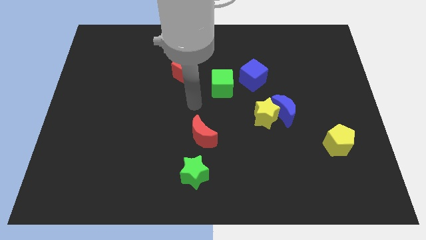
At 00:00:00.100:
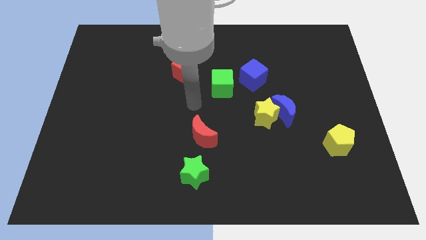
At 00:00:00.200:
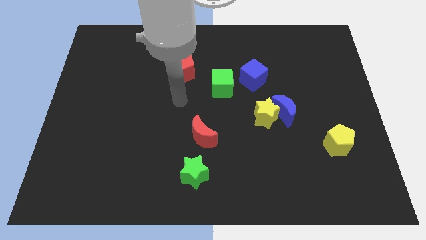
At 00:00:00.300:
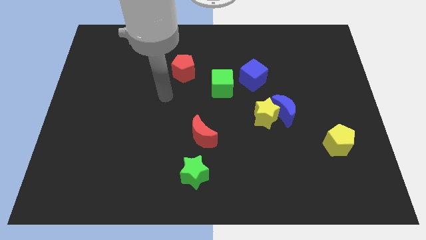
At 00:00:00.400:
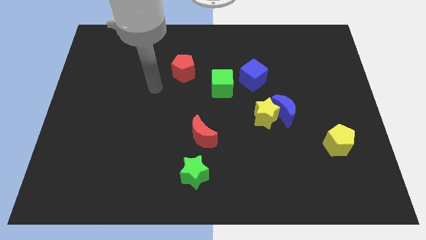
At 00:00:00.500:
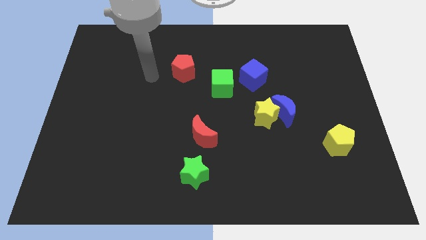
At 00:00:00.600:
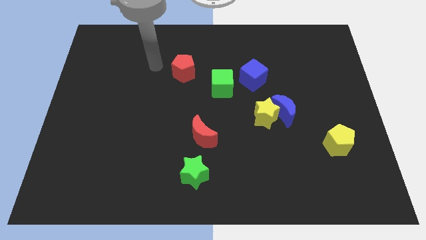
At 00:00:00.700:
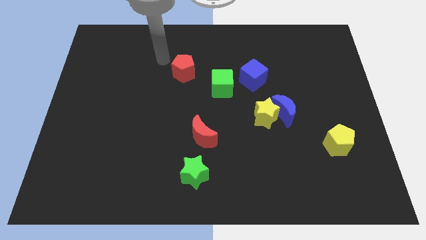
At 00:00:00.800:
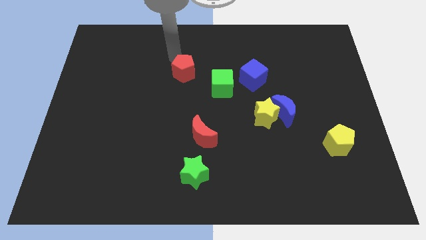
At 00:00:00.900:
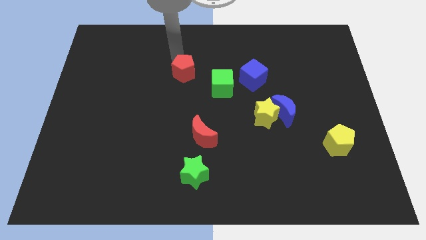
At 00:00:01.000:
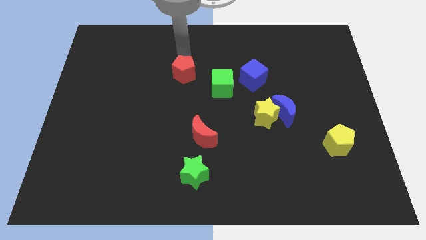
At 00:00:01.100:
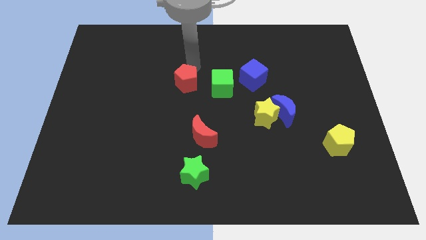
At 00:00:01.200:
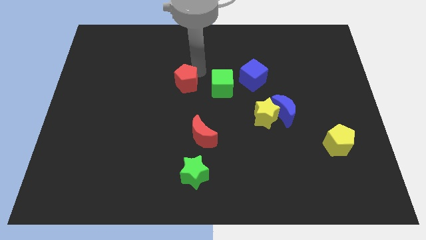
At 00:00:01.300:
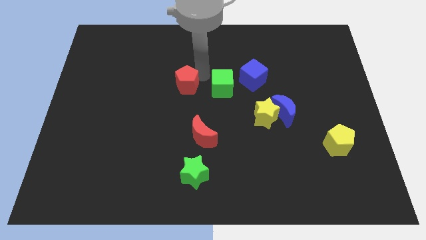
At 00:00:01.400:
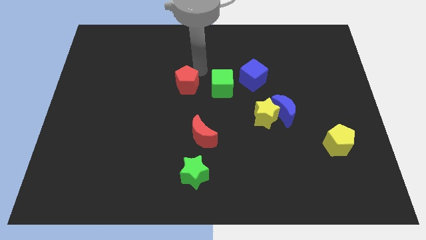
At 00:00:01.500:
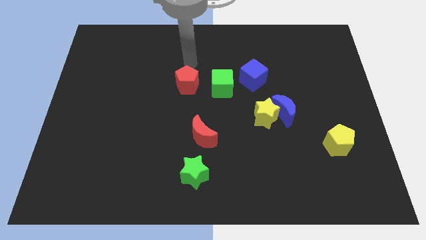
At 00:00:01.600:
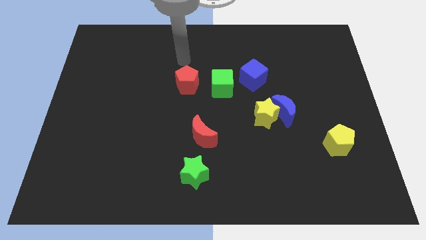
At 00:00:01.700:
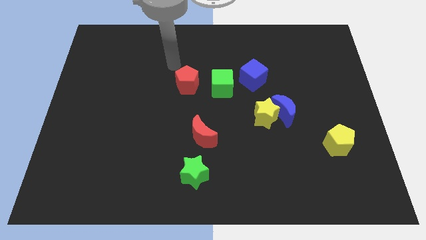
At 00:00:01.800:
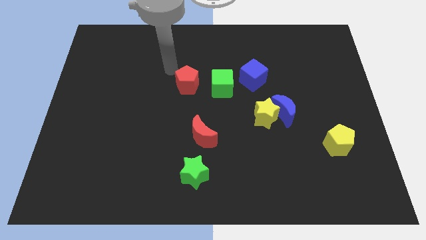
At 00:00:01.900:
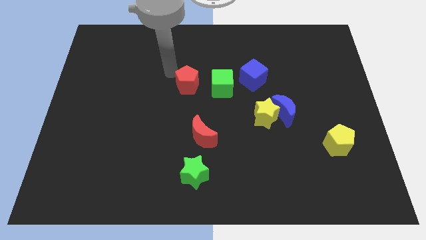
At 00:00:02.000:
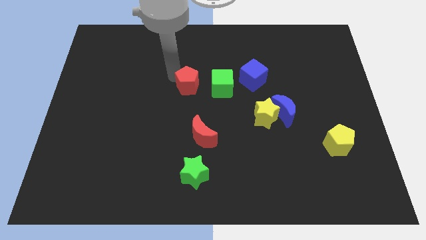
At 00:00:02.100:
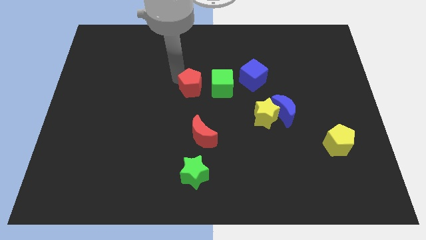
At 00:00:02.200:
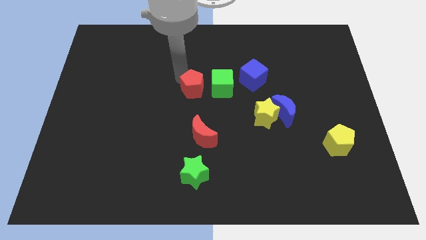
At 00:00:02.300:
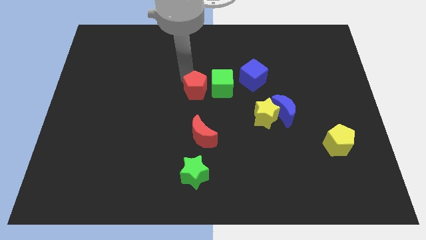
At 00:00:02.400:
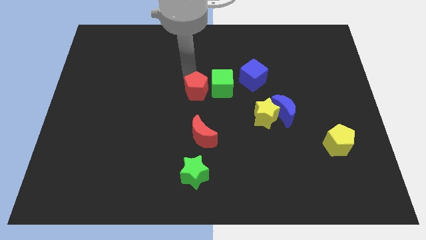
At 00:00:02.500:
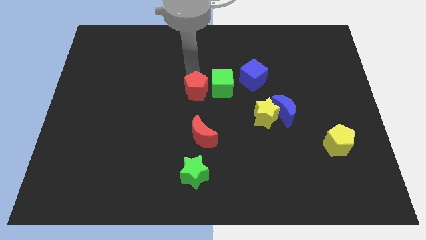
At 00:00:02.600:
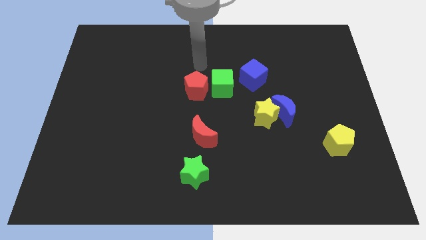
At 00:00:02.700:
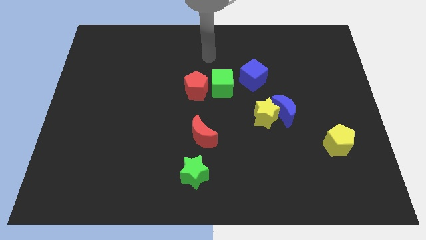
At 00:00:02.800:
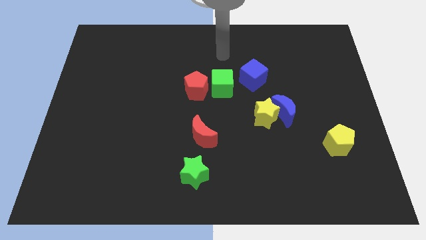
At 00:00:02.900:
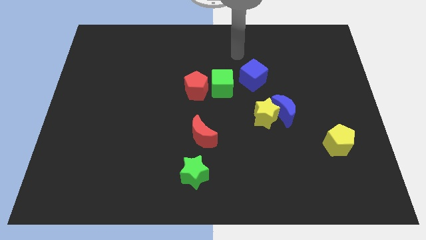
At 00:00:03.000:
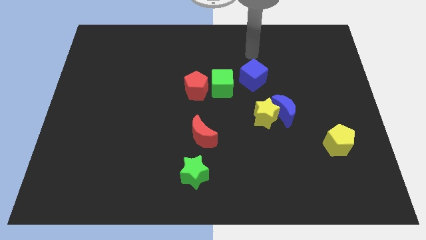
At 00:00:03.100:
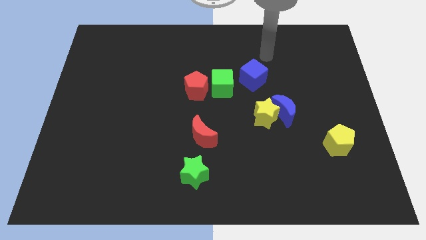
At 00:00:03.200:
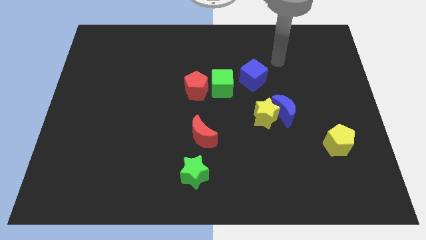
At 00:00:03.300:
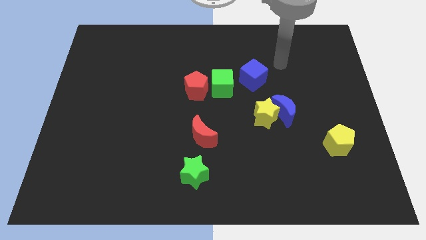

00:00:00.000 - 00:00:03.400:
move the red penatgon close to the green cube

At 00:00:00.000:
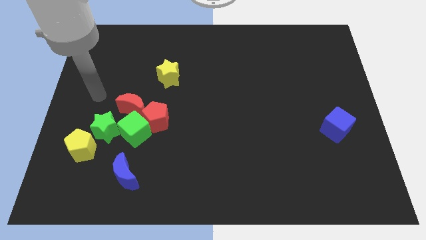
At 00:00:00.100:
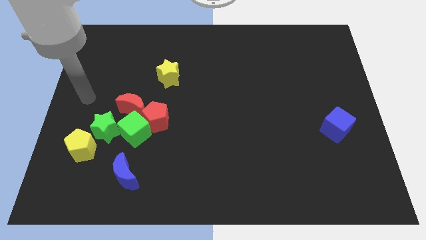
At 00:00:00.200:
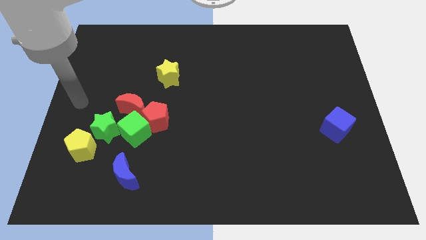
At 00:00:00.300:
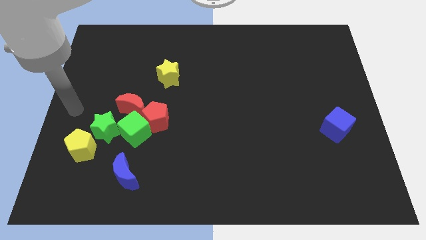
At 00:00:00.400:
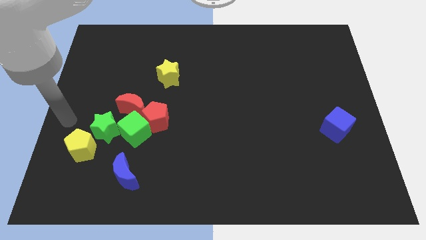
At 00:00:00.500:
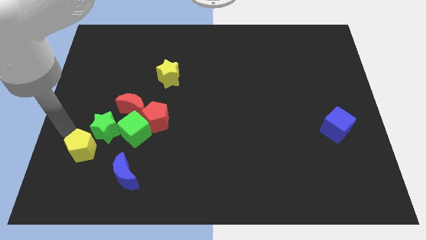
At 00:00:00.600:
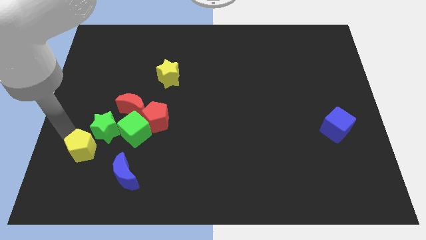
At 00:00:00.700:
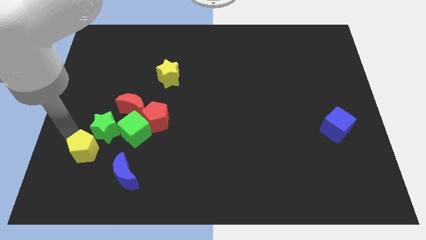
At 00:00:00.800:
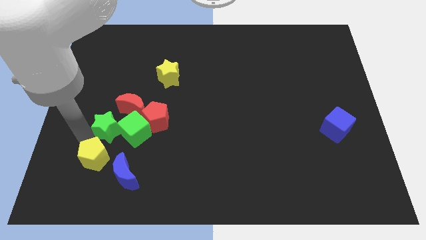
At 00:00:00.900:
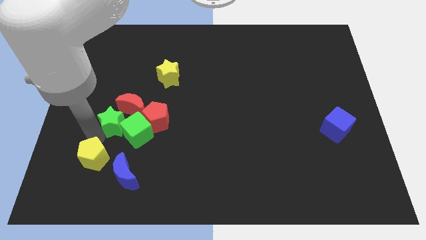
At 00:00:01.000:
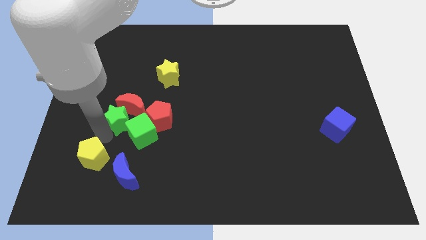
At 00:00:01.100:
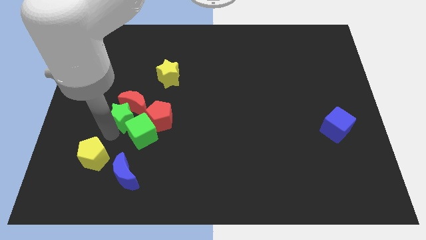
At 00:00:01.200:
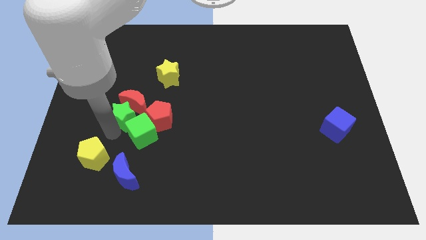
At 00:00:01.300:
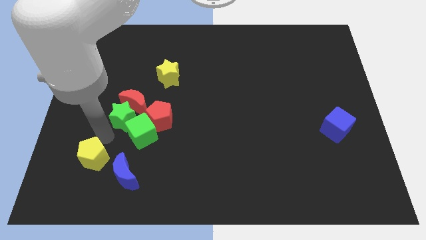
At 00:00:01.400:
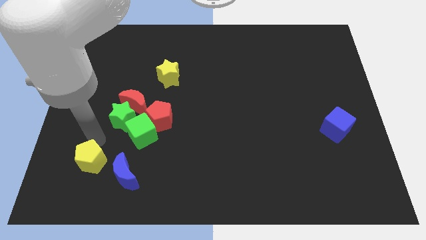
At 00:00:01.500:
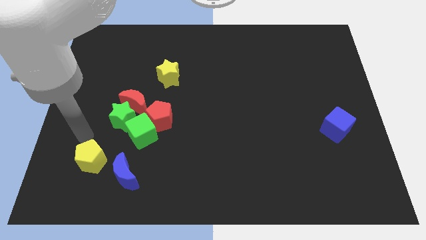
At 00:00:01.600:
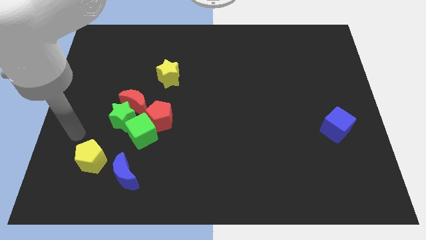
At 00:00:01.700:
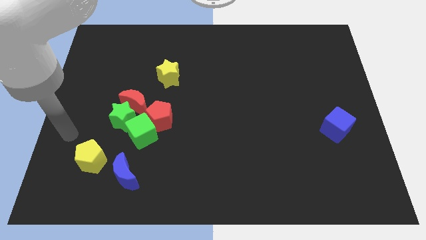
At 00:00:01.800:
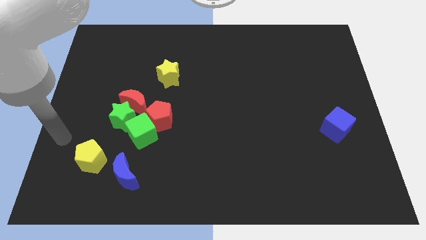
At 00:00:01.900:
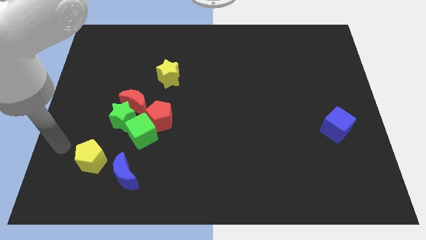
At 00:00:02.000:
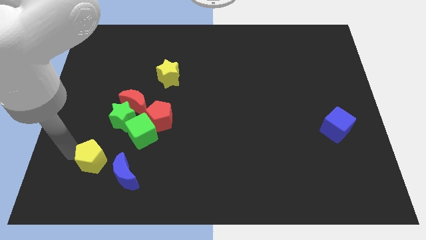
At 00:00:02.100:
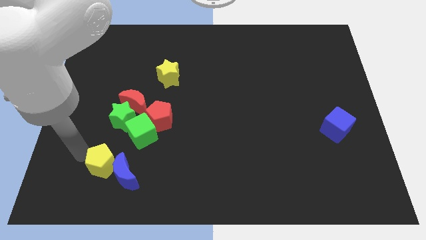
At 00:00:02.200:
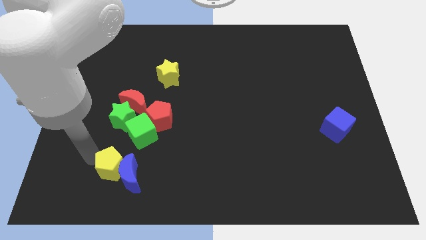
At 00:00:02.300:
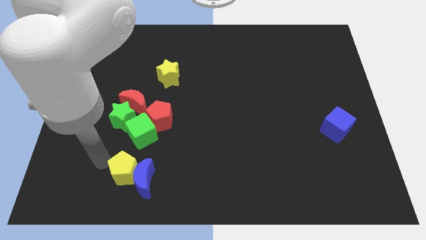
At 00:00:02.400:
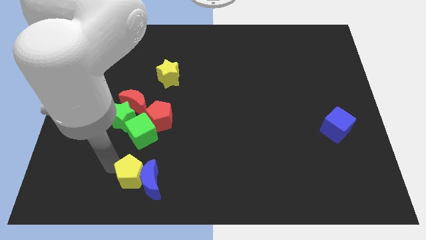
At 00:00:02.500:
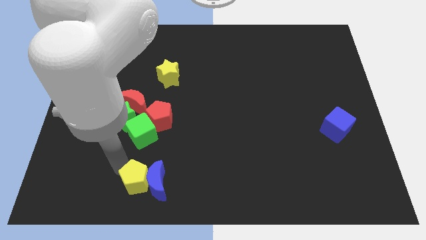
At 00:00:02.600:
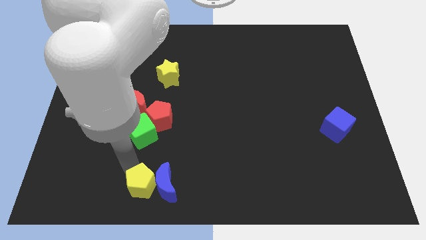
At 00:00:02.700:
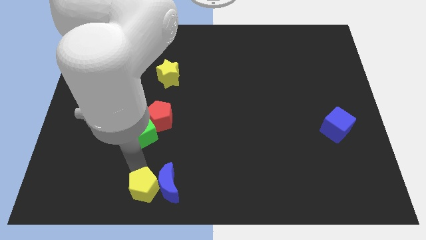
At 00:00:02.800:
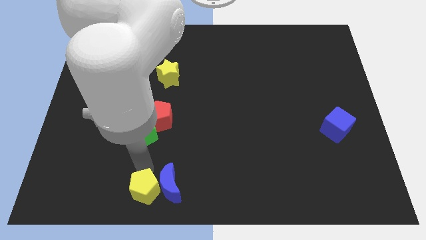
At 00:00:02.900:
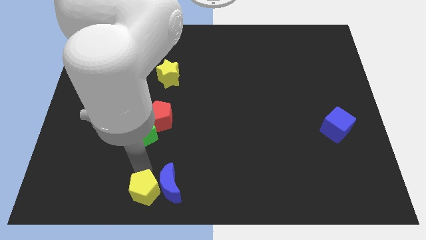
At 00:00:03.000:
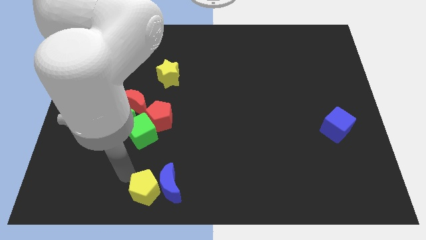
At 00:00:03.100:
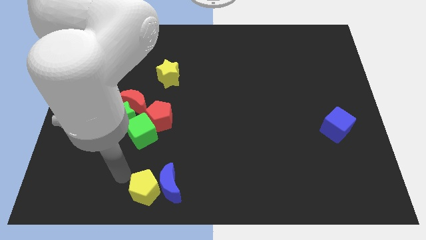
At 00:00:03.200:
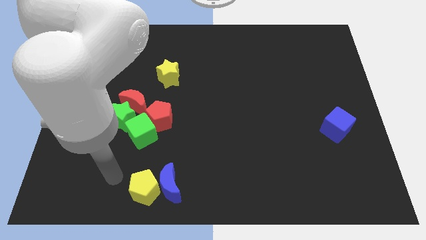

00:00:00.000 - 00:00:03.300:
push the yellow pentagon into the blue moon

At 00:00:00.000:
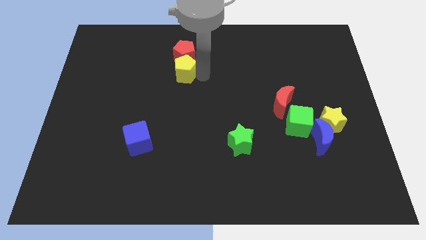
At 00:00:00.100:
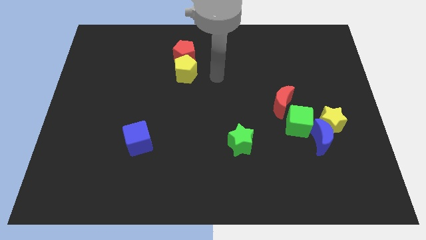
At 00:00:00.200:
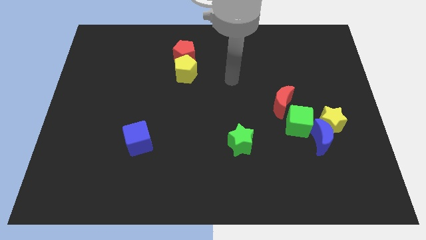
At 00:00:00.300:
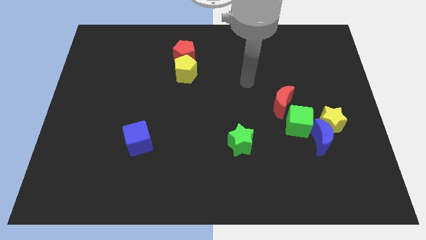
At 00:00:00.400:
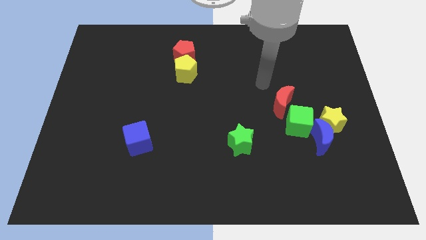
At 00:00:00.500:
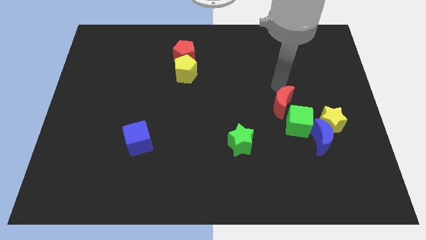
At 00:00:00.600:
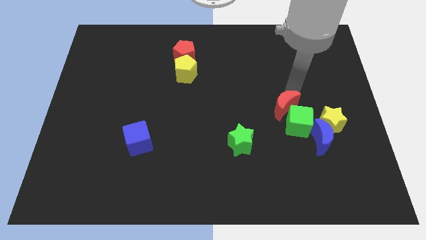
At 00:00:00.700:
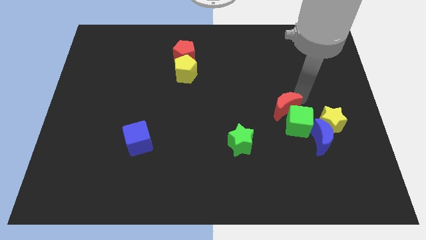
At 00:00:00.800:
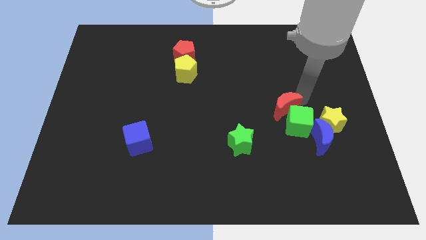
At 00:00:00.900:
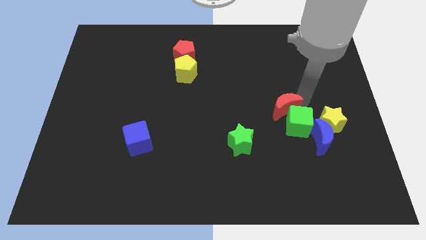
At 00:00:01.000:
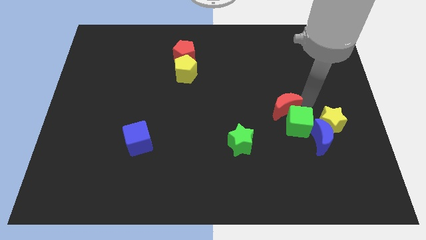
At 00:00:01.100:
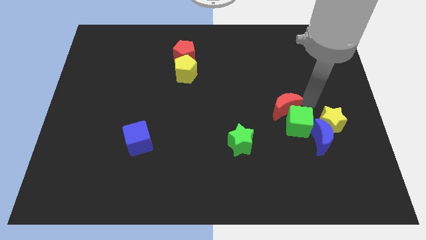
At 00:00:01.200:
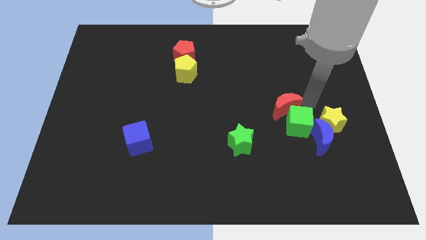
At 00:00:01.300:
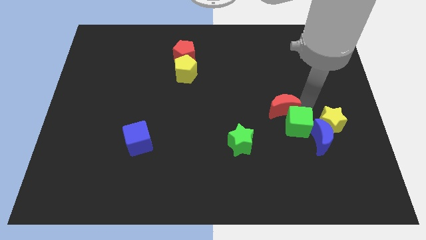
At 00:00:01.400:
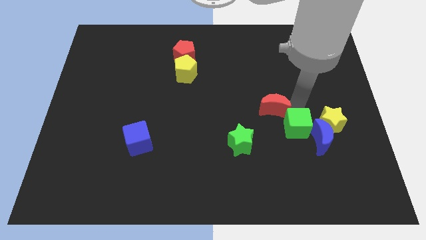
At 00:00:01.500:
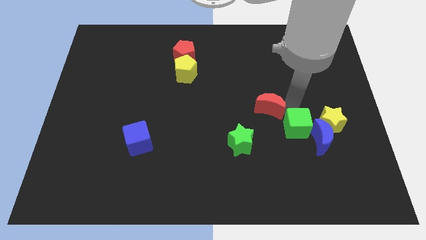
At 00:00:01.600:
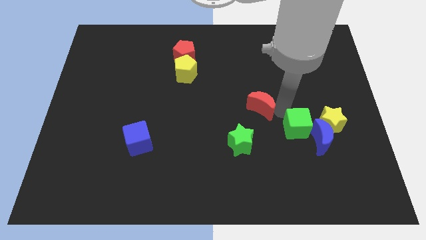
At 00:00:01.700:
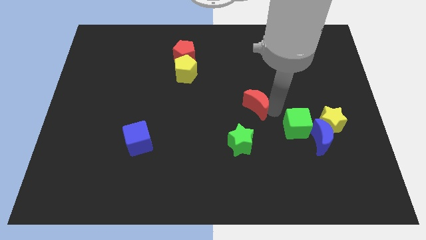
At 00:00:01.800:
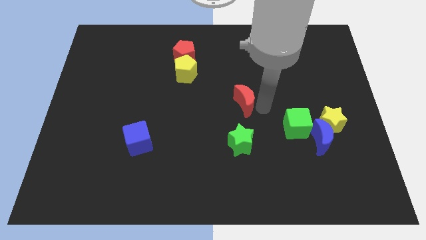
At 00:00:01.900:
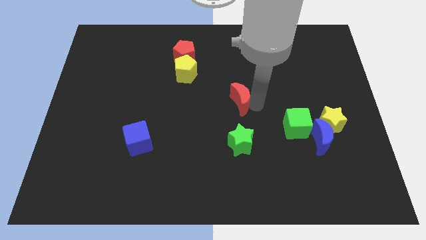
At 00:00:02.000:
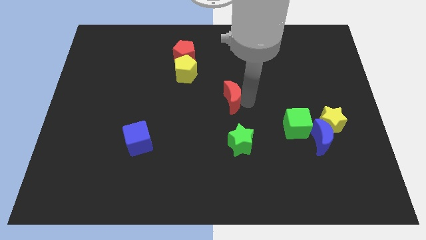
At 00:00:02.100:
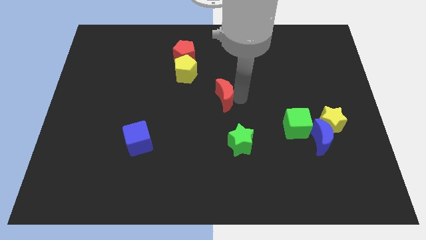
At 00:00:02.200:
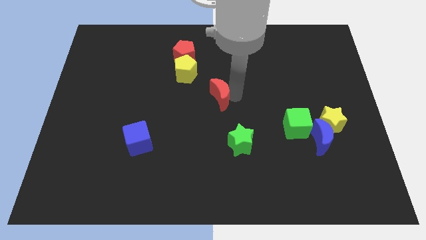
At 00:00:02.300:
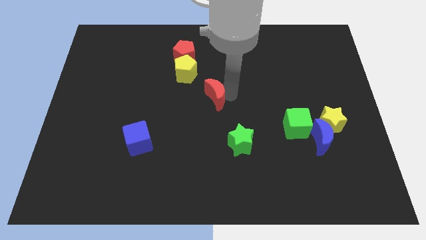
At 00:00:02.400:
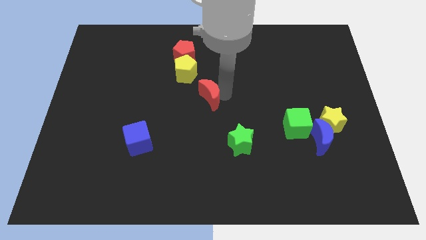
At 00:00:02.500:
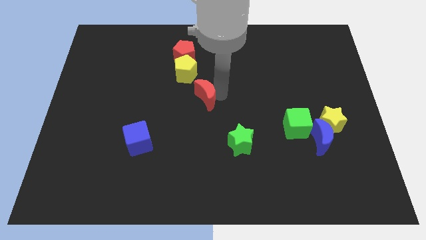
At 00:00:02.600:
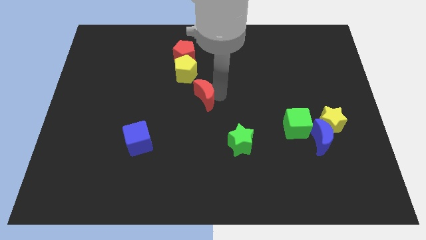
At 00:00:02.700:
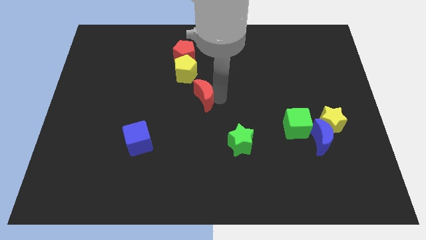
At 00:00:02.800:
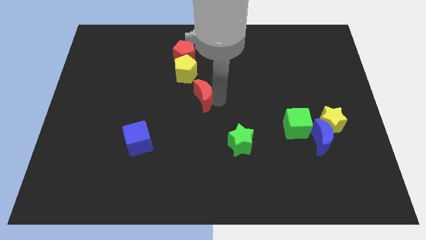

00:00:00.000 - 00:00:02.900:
separate the red moon from the green cube
